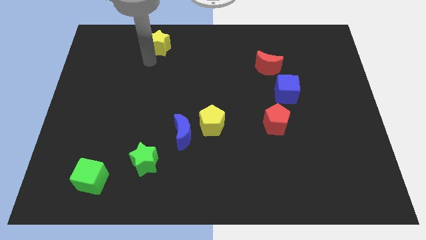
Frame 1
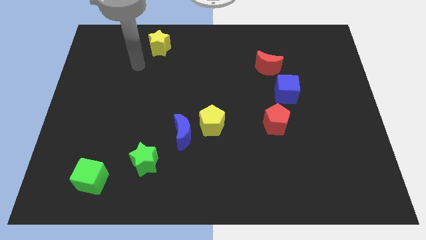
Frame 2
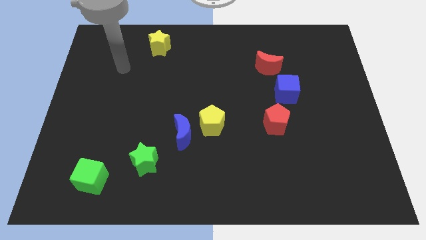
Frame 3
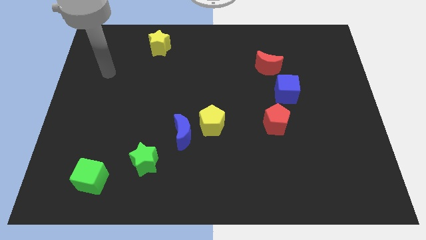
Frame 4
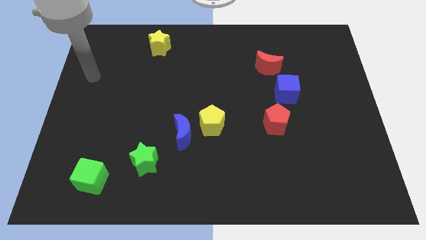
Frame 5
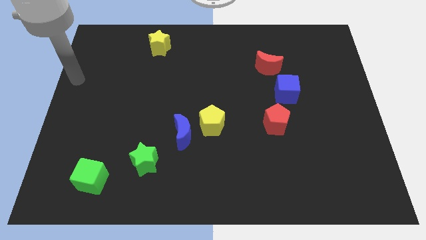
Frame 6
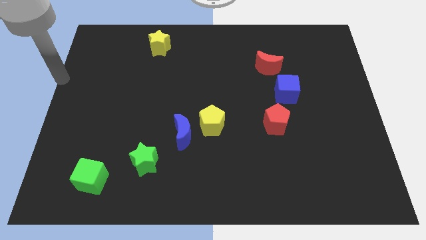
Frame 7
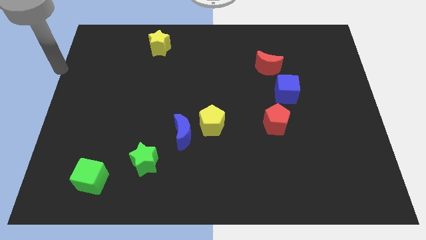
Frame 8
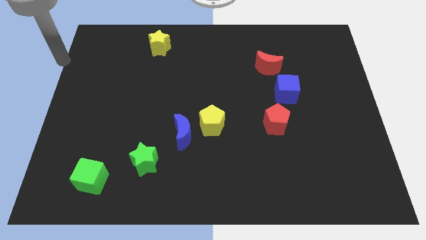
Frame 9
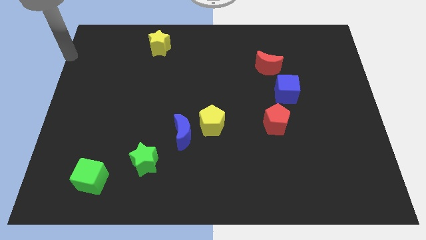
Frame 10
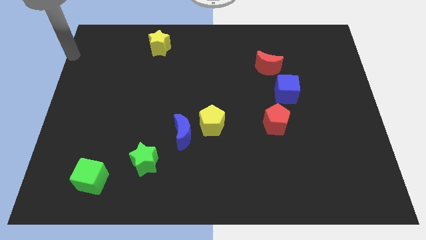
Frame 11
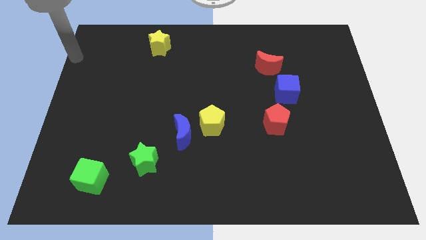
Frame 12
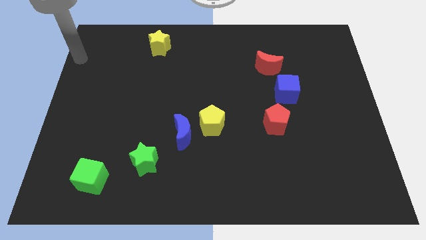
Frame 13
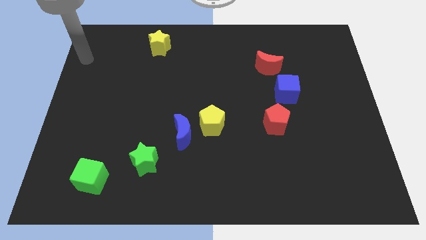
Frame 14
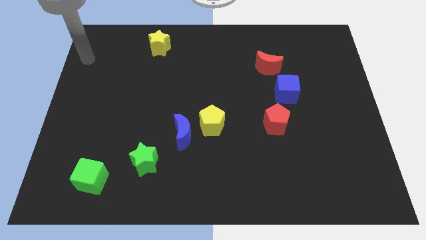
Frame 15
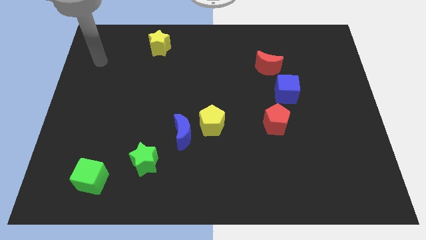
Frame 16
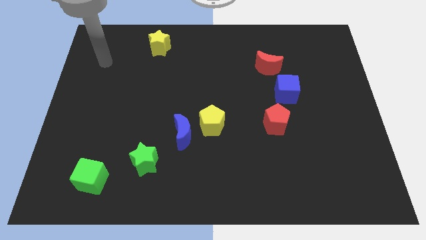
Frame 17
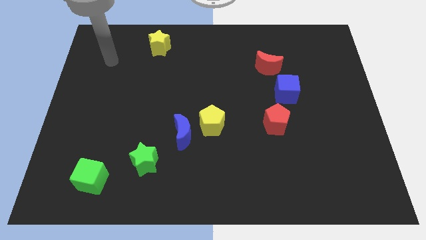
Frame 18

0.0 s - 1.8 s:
move your arm away from the yellow star

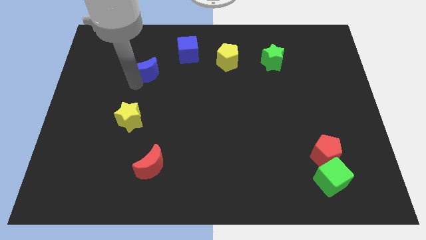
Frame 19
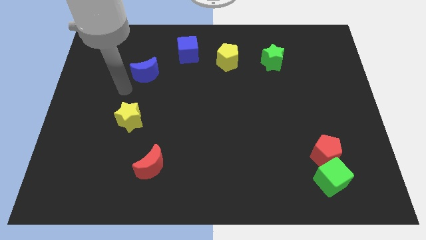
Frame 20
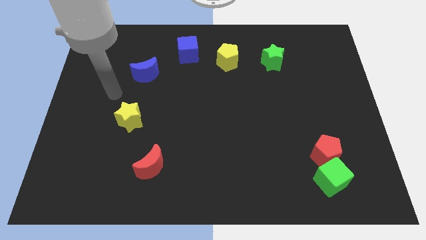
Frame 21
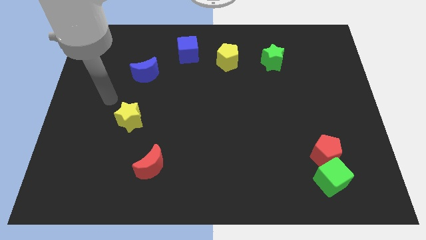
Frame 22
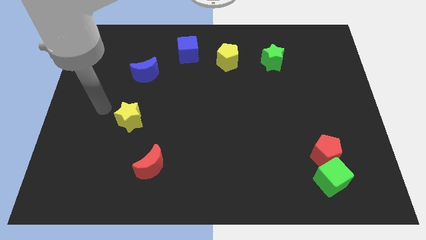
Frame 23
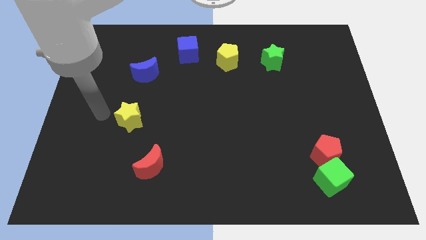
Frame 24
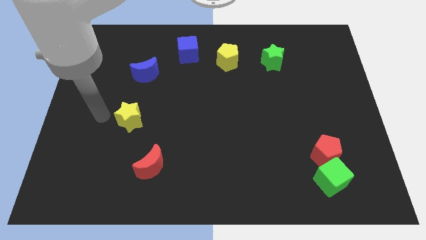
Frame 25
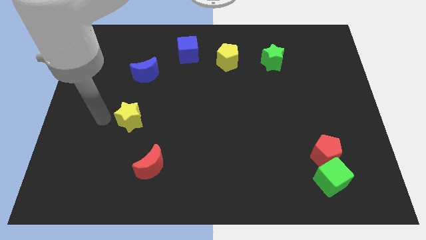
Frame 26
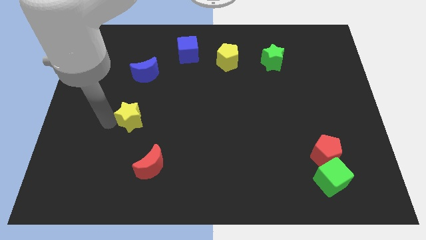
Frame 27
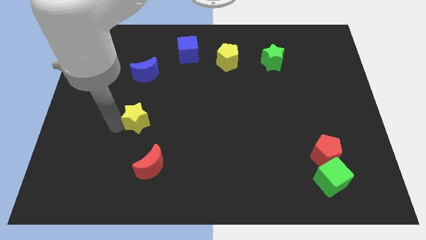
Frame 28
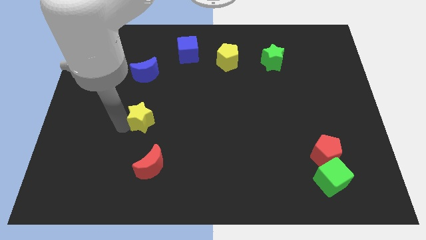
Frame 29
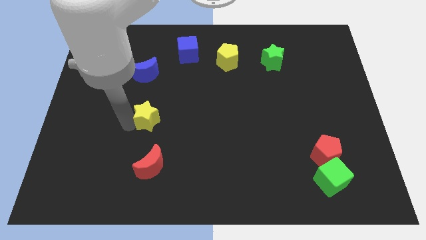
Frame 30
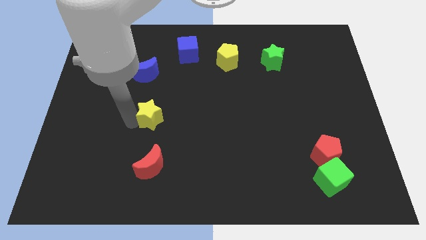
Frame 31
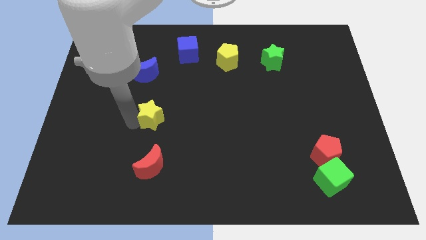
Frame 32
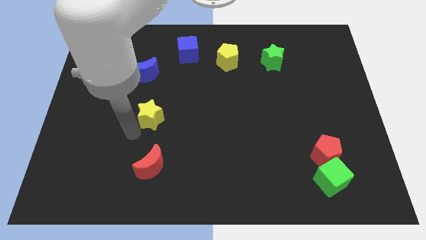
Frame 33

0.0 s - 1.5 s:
put the yellow star between the blue moon and red moon

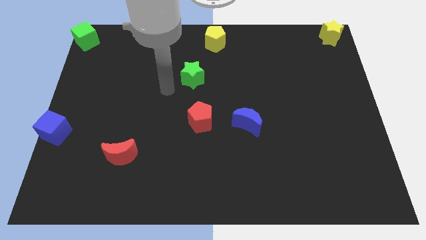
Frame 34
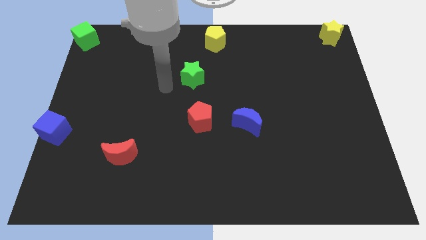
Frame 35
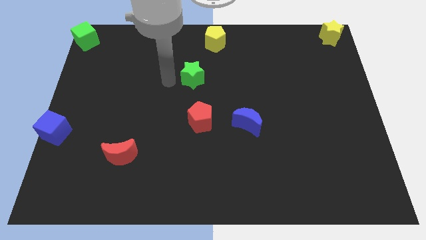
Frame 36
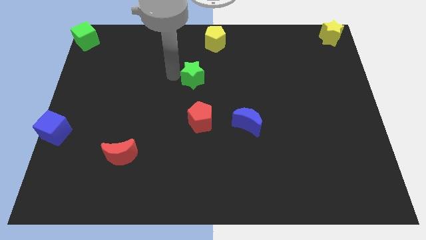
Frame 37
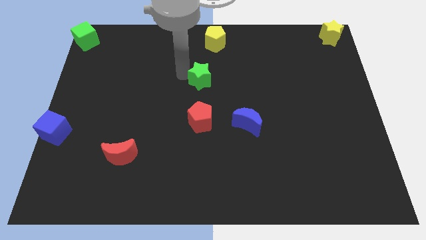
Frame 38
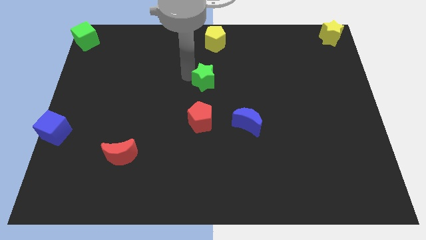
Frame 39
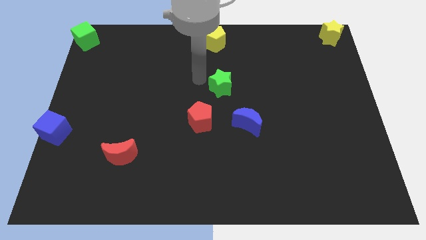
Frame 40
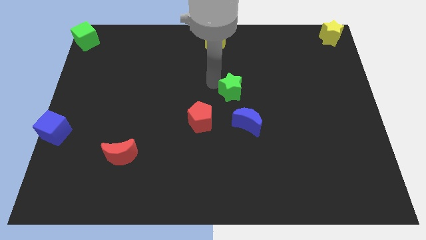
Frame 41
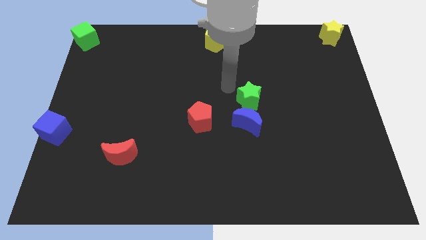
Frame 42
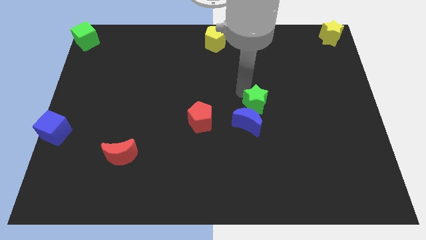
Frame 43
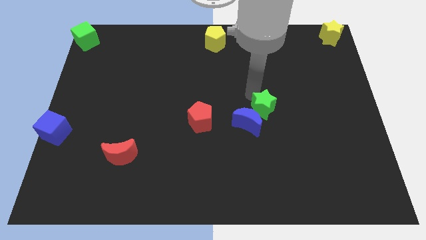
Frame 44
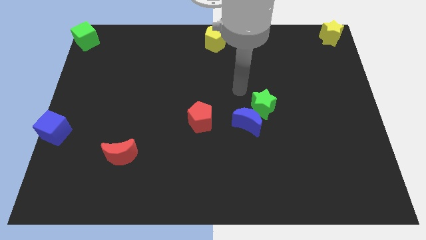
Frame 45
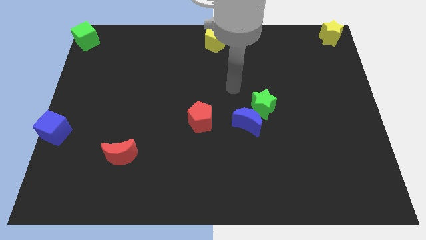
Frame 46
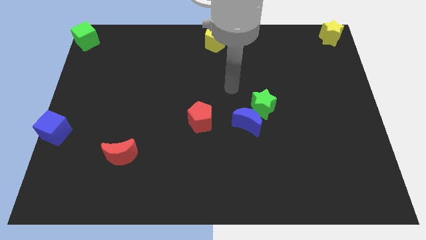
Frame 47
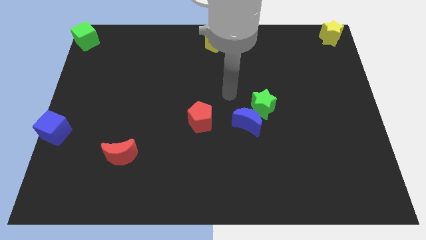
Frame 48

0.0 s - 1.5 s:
place the green star above the blue crescent

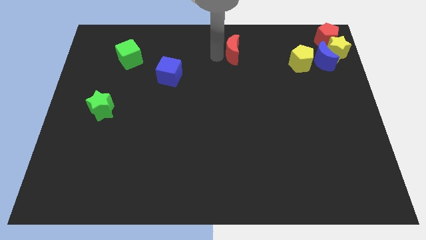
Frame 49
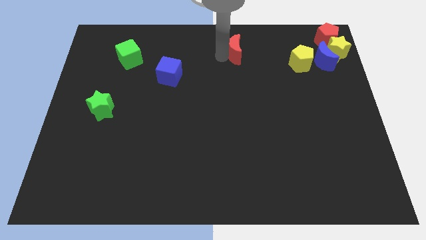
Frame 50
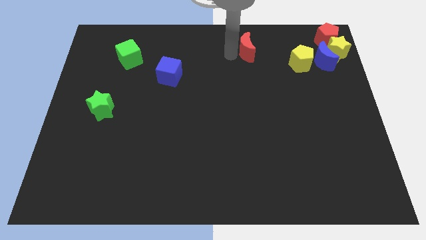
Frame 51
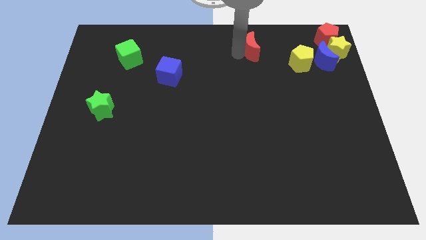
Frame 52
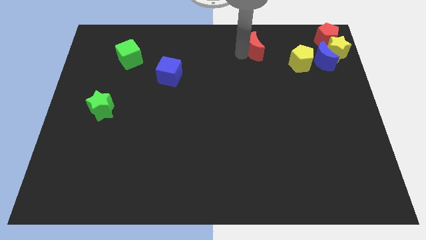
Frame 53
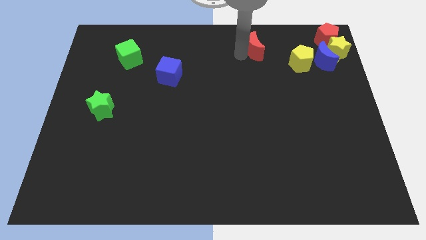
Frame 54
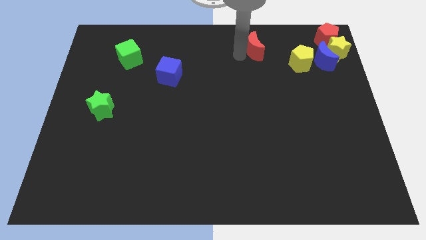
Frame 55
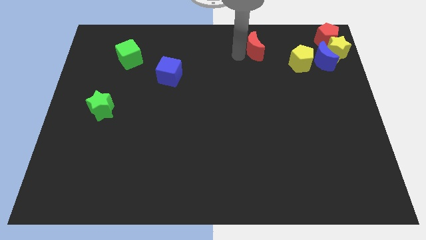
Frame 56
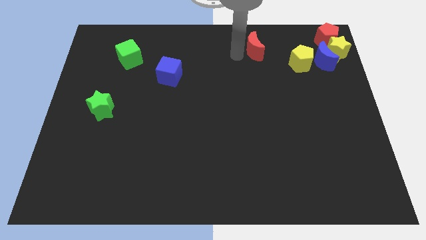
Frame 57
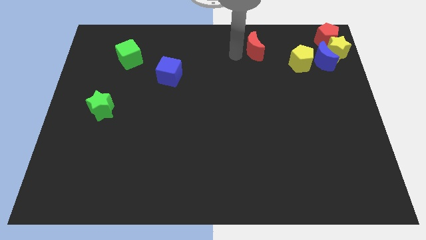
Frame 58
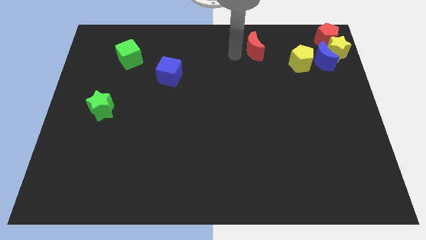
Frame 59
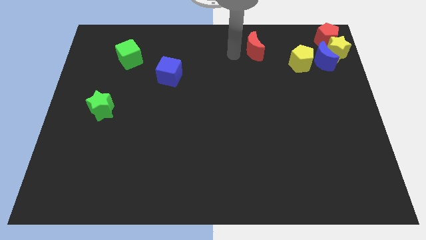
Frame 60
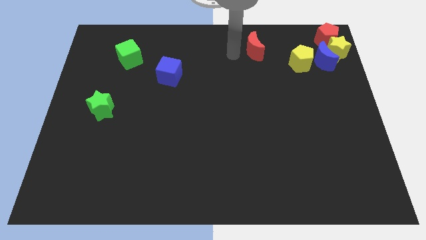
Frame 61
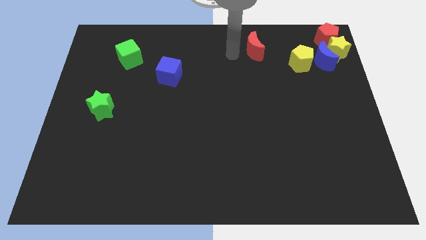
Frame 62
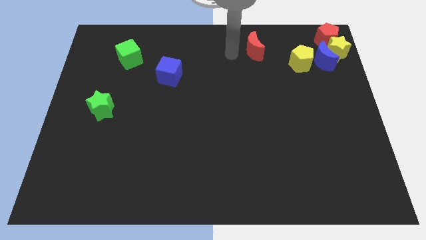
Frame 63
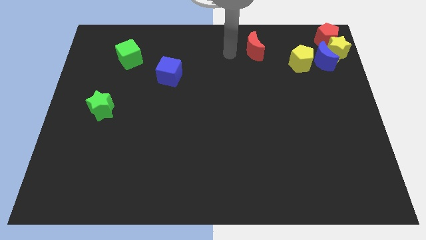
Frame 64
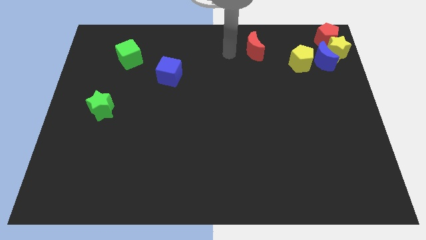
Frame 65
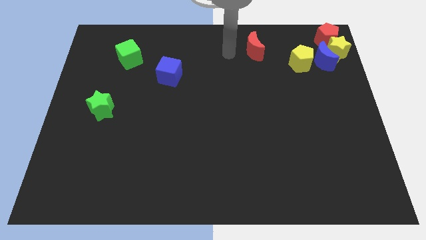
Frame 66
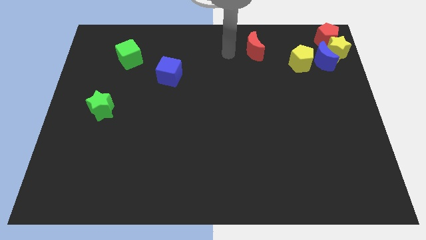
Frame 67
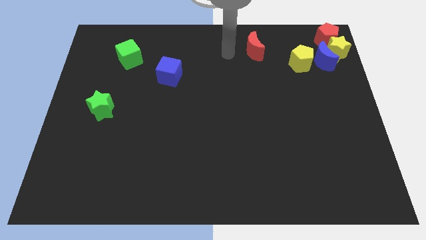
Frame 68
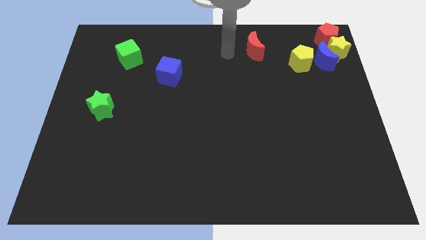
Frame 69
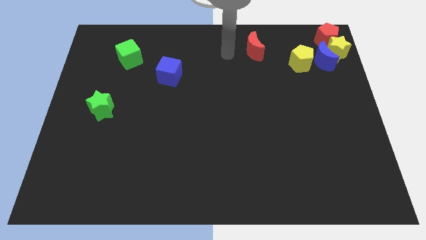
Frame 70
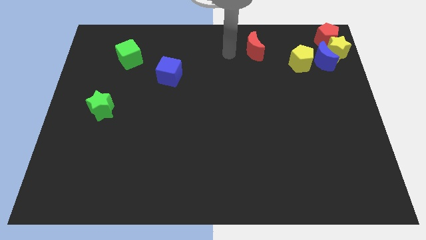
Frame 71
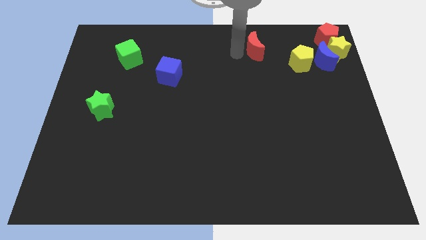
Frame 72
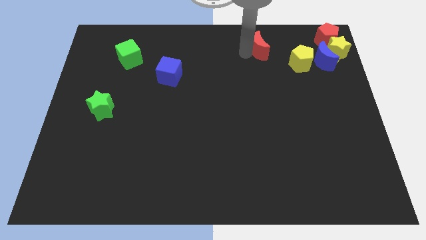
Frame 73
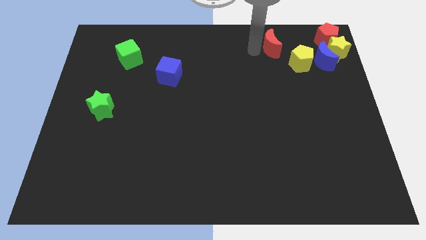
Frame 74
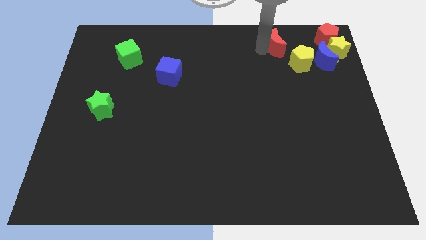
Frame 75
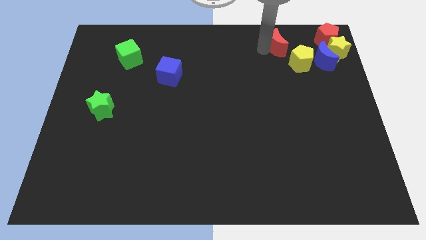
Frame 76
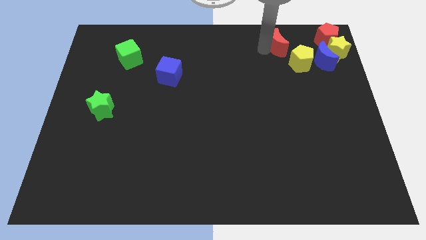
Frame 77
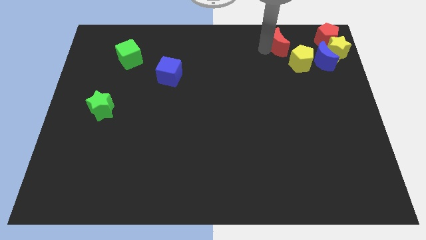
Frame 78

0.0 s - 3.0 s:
push the red crescent towards the top left side of the yellow pentagon

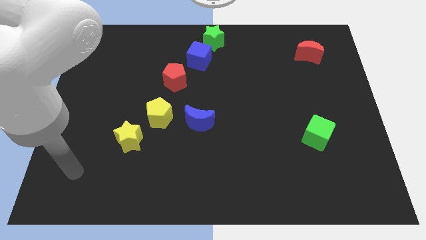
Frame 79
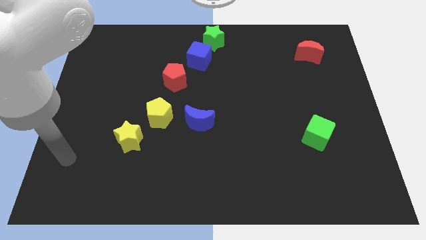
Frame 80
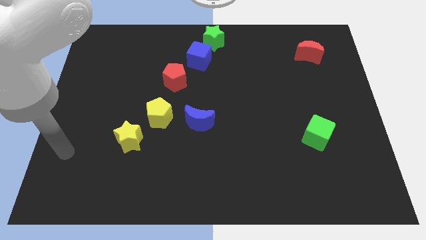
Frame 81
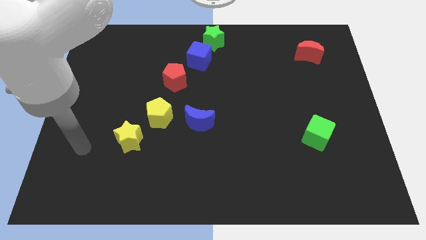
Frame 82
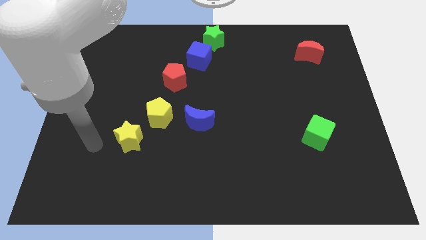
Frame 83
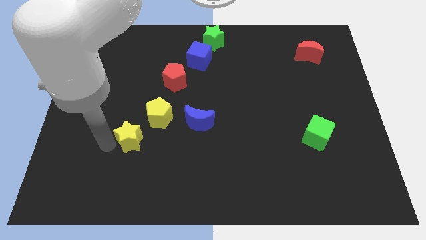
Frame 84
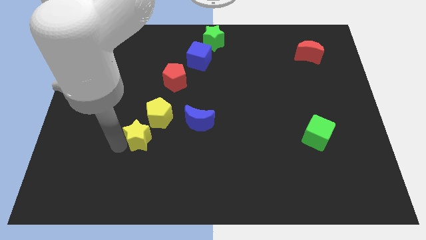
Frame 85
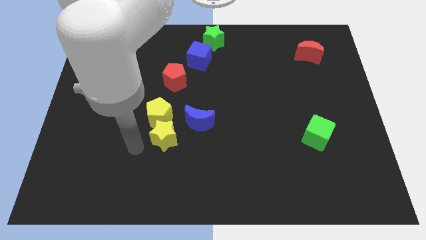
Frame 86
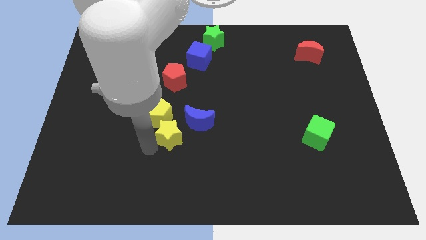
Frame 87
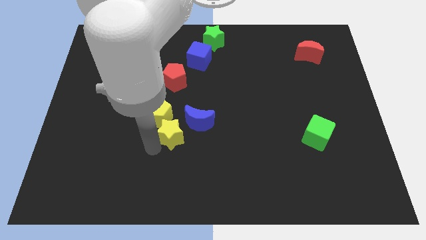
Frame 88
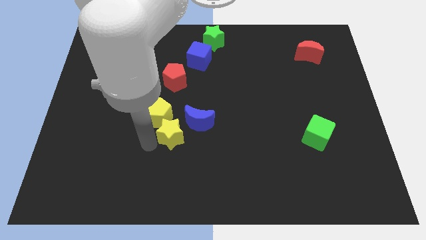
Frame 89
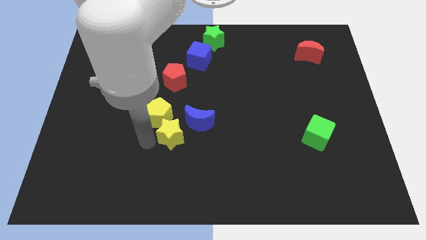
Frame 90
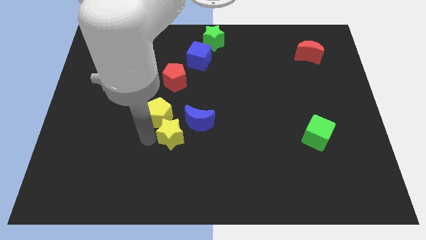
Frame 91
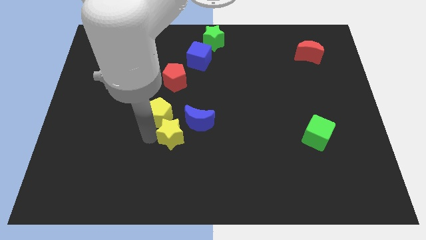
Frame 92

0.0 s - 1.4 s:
slide the yellow star to the right
